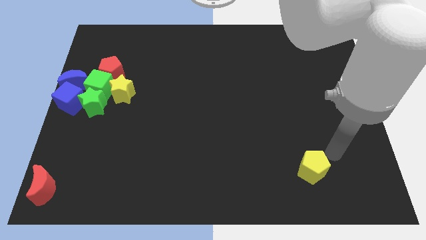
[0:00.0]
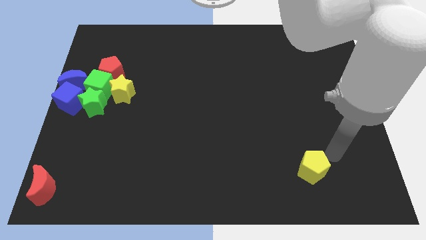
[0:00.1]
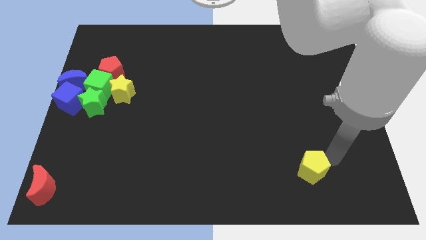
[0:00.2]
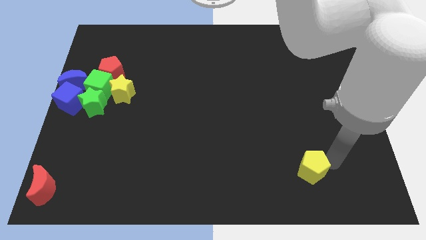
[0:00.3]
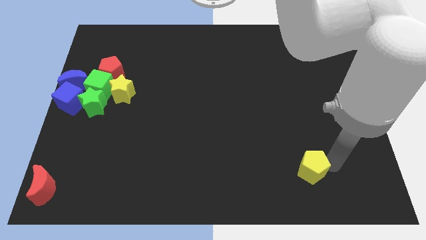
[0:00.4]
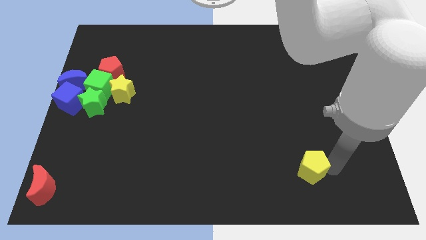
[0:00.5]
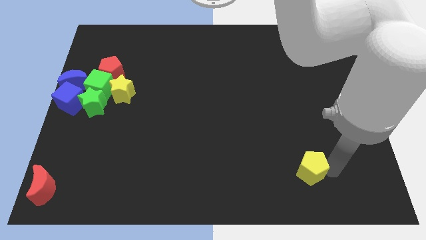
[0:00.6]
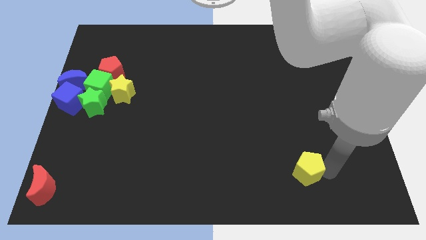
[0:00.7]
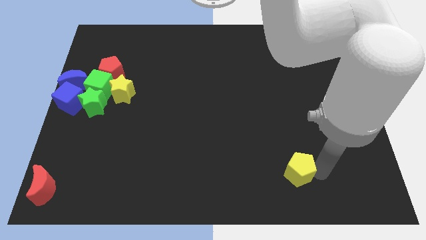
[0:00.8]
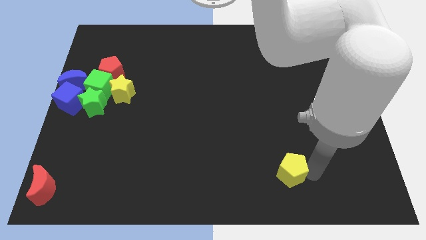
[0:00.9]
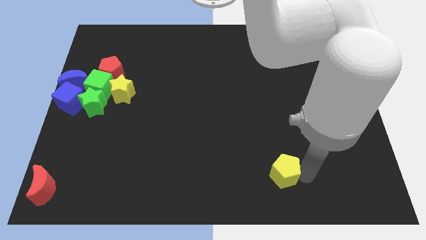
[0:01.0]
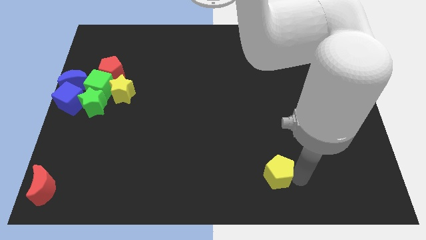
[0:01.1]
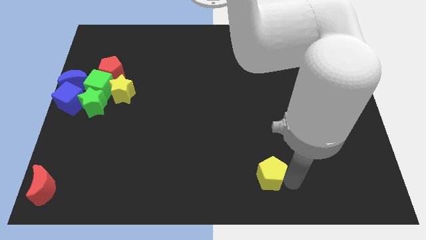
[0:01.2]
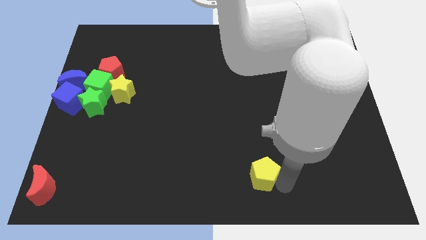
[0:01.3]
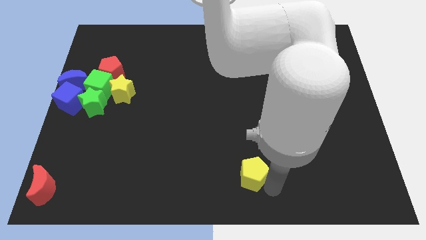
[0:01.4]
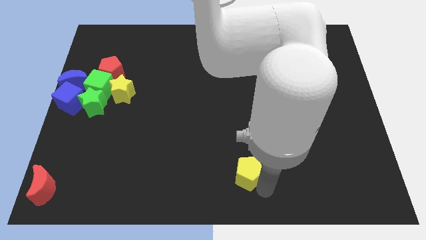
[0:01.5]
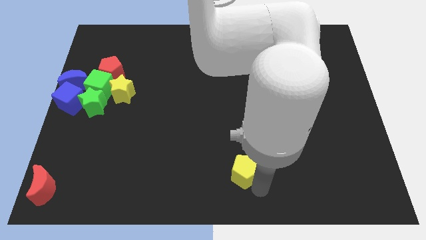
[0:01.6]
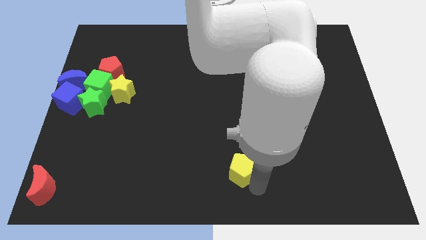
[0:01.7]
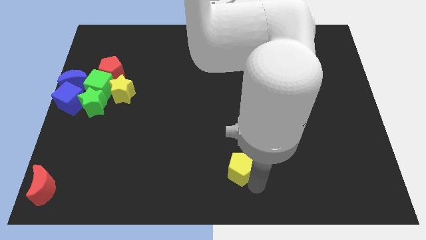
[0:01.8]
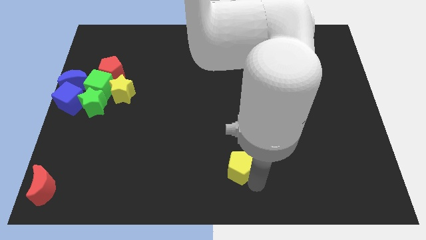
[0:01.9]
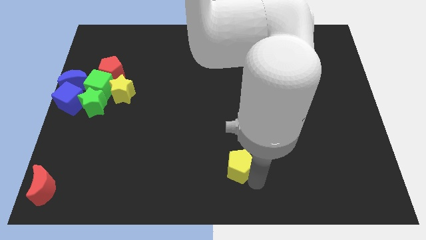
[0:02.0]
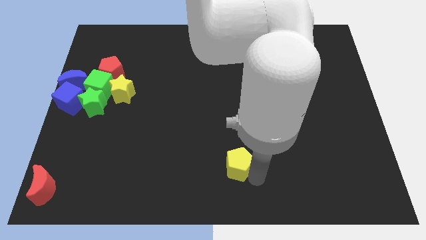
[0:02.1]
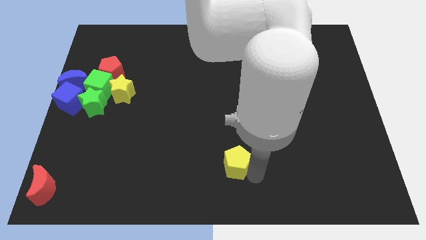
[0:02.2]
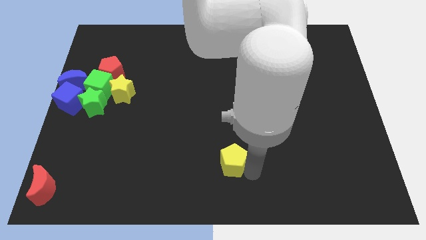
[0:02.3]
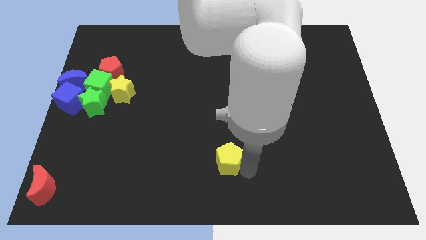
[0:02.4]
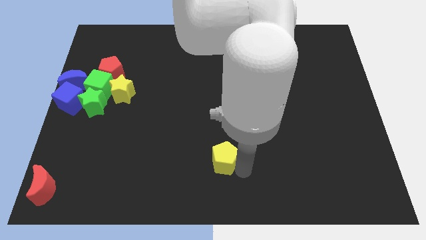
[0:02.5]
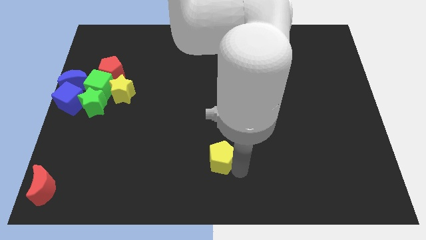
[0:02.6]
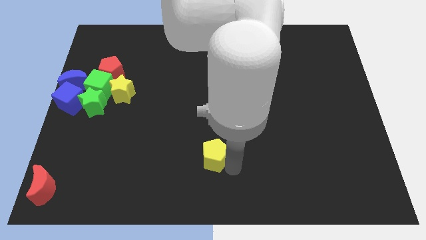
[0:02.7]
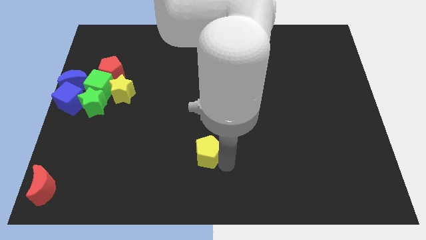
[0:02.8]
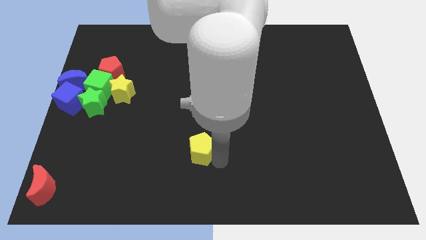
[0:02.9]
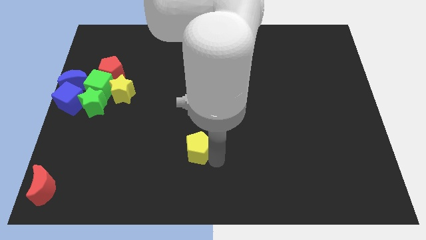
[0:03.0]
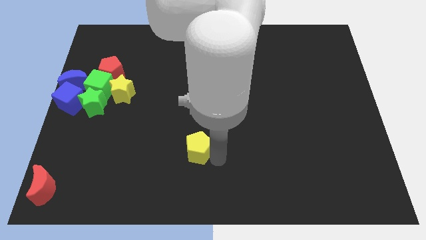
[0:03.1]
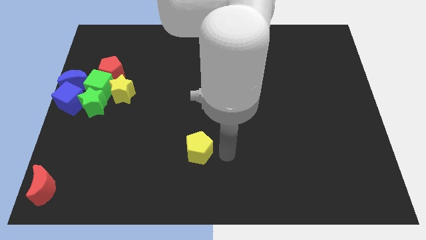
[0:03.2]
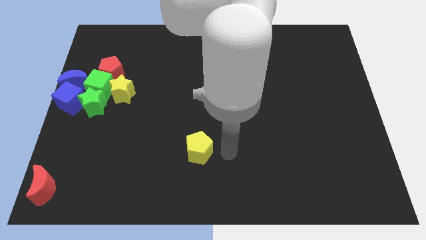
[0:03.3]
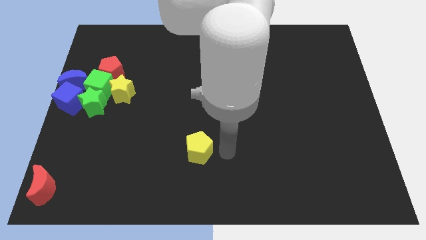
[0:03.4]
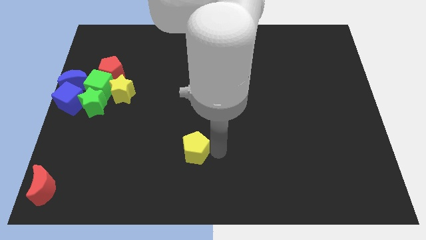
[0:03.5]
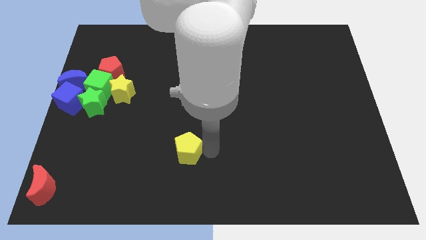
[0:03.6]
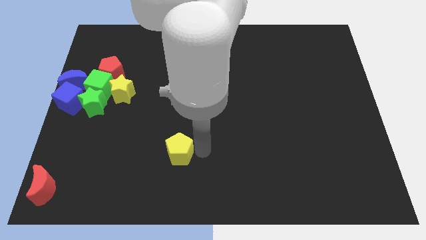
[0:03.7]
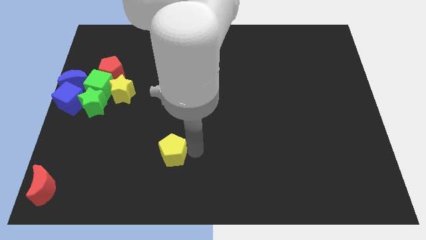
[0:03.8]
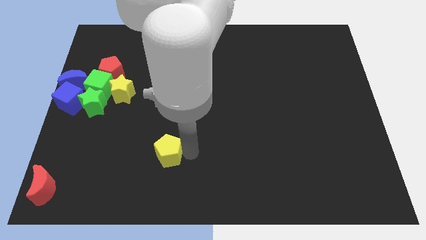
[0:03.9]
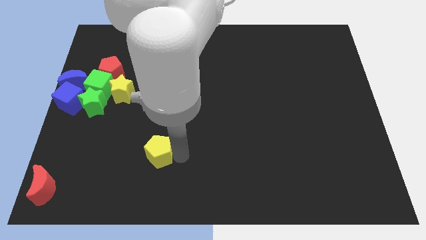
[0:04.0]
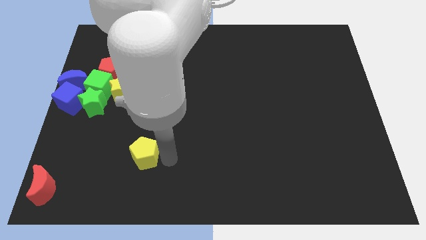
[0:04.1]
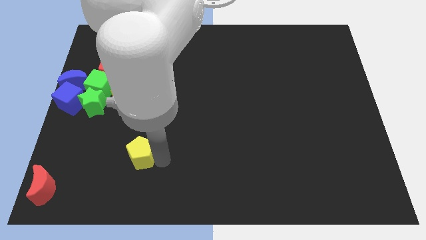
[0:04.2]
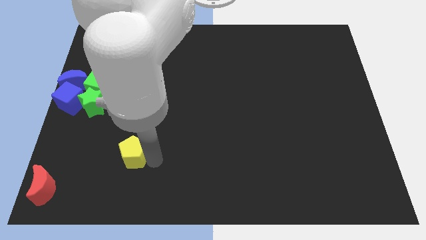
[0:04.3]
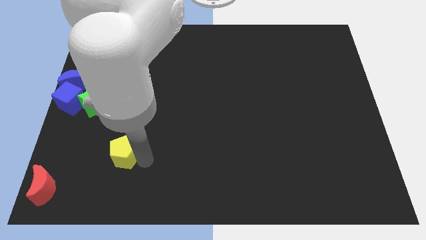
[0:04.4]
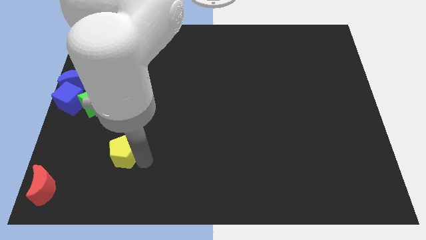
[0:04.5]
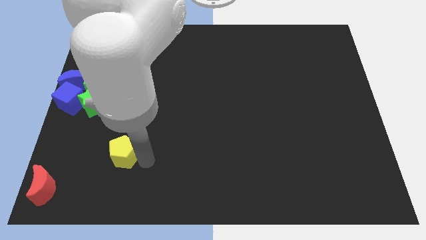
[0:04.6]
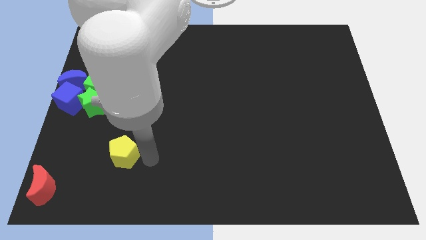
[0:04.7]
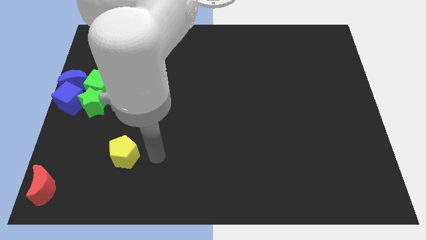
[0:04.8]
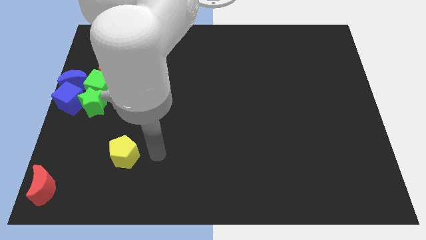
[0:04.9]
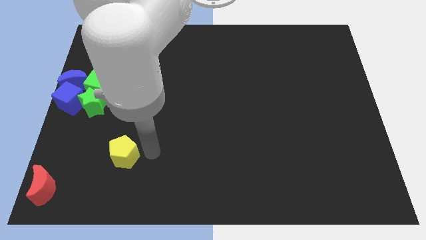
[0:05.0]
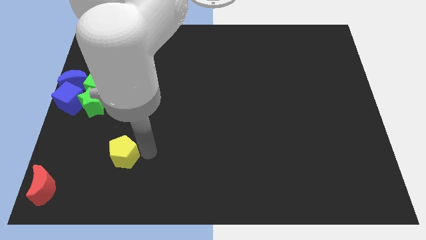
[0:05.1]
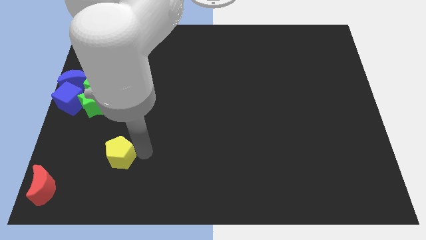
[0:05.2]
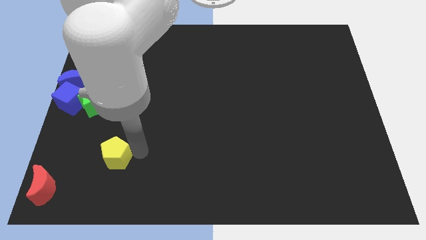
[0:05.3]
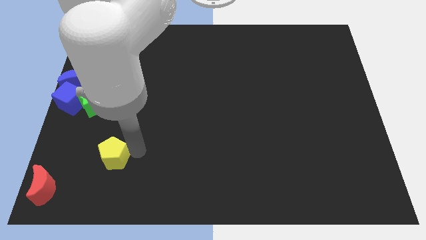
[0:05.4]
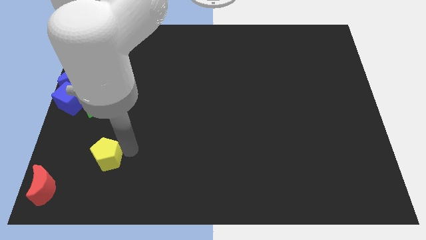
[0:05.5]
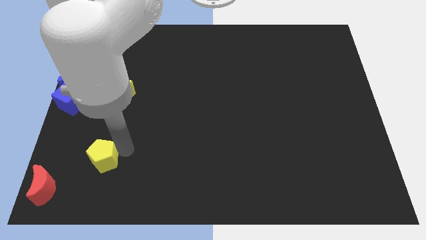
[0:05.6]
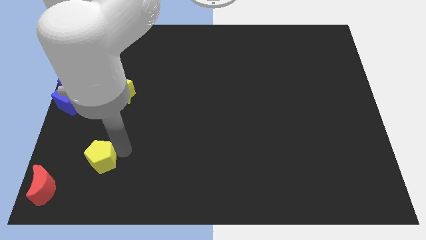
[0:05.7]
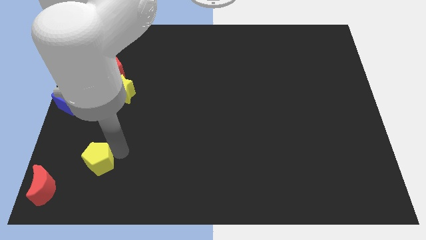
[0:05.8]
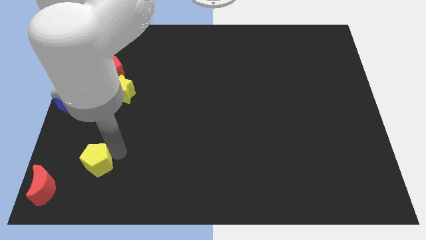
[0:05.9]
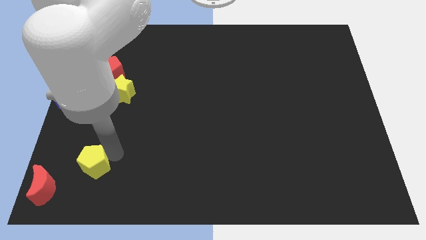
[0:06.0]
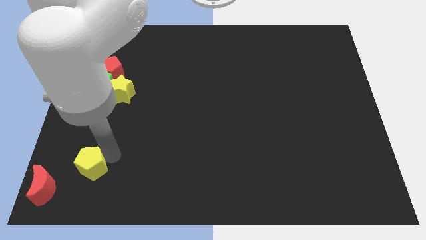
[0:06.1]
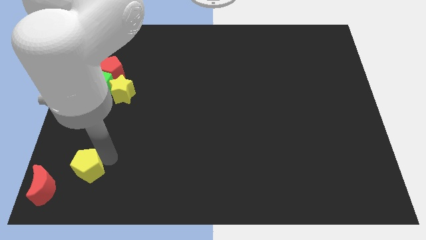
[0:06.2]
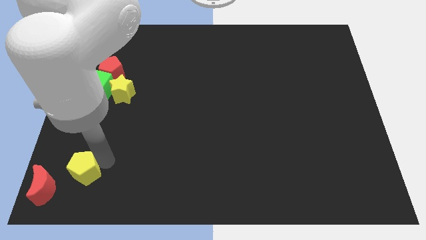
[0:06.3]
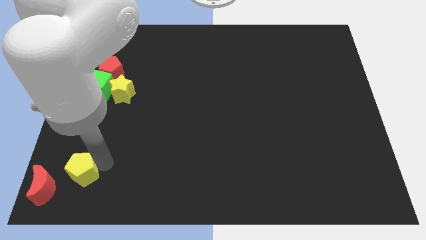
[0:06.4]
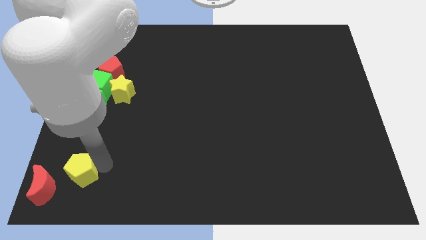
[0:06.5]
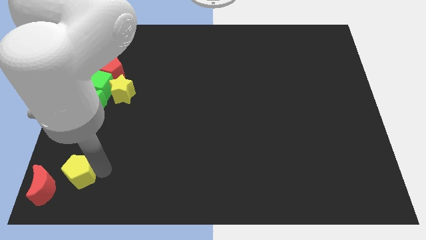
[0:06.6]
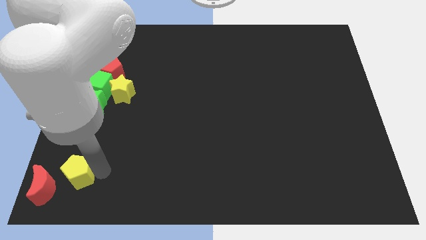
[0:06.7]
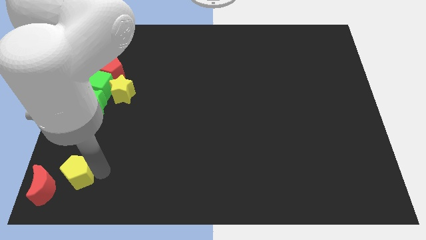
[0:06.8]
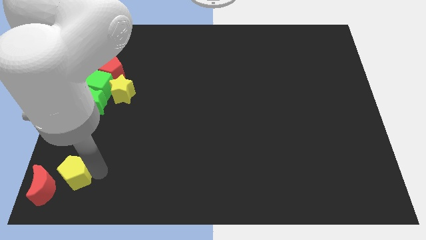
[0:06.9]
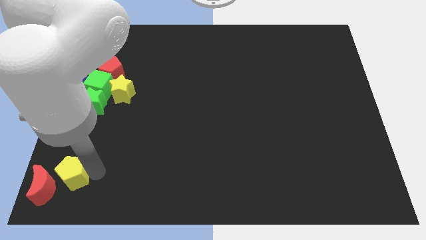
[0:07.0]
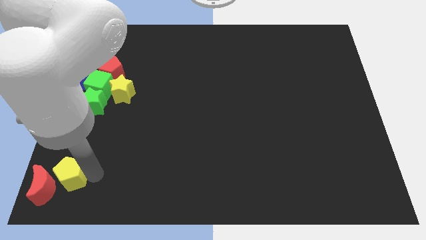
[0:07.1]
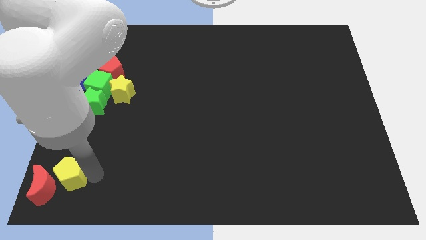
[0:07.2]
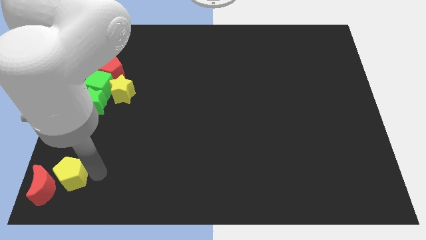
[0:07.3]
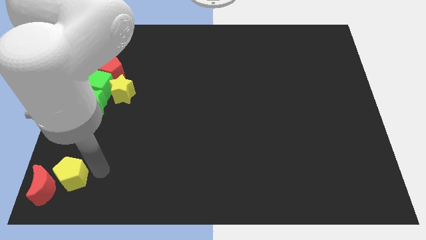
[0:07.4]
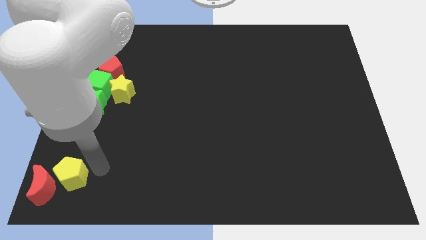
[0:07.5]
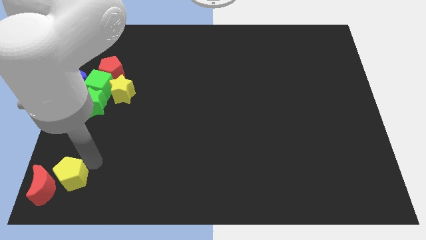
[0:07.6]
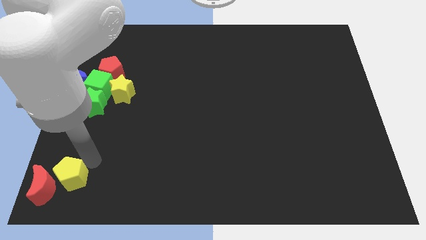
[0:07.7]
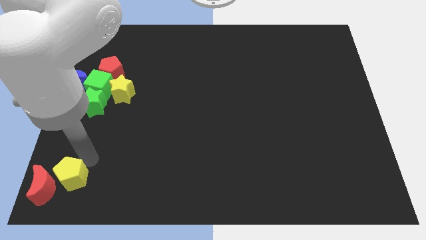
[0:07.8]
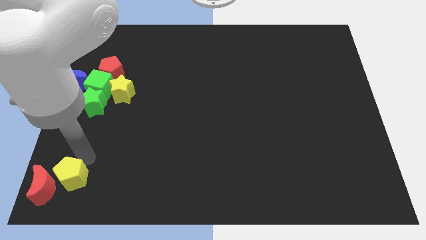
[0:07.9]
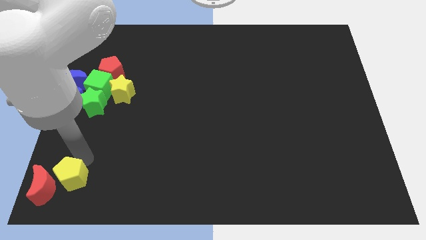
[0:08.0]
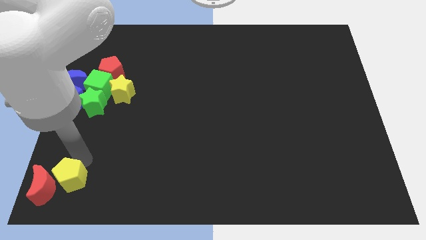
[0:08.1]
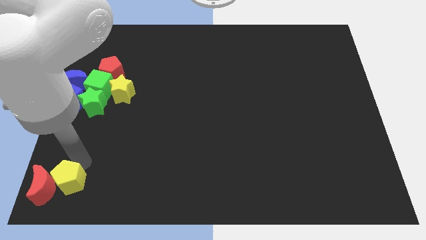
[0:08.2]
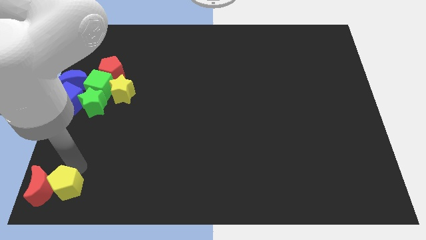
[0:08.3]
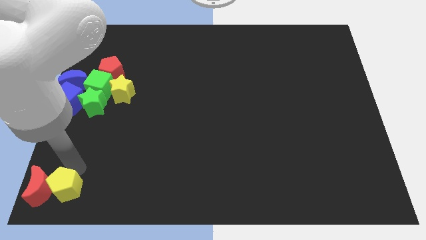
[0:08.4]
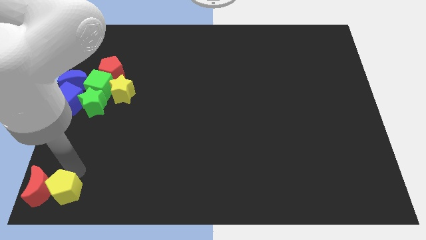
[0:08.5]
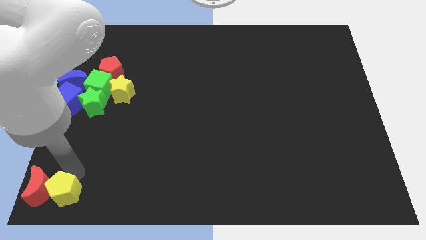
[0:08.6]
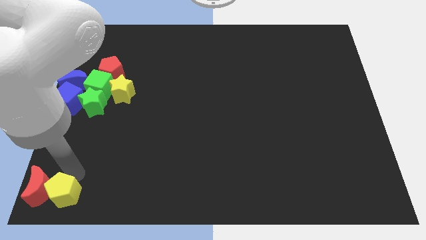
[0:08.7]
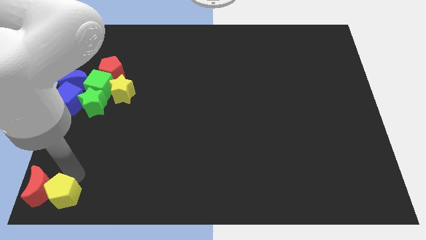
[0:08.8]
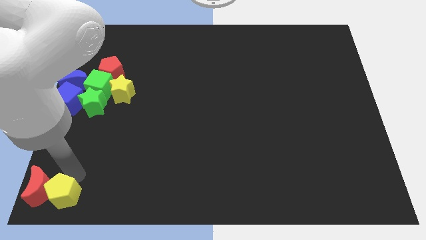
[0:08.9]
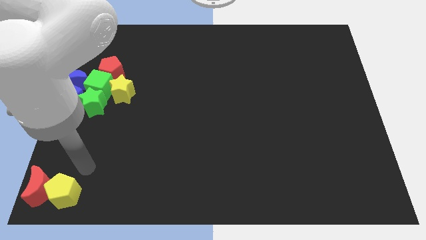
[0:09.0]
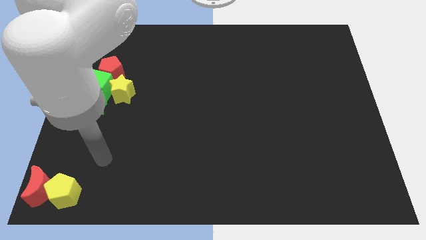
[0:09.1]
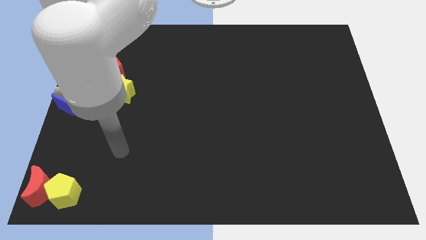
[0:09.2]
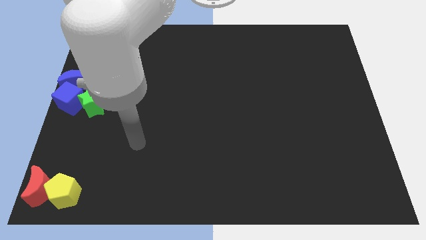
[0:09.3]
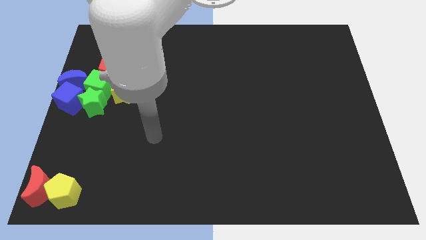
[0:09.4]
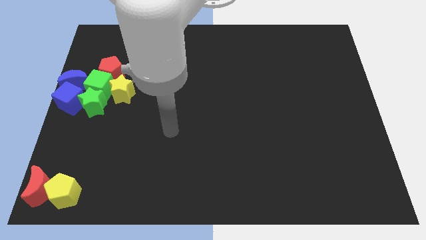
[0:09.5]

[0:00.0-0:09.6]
move the yellow pentagon to the bottom left of the board
